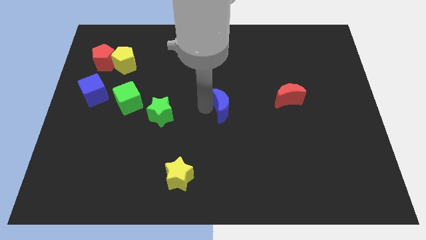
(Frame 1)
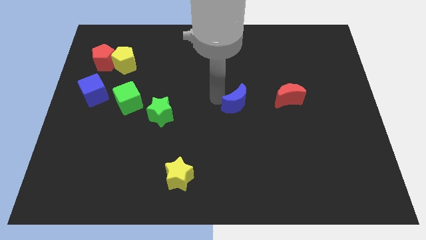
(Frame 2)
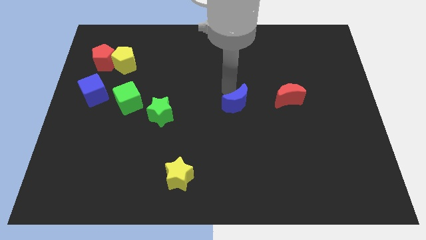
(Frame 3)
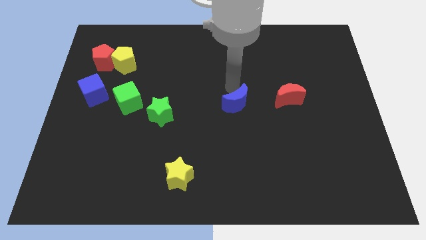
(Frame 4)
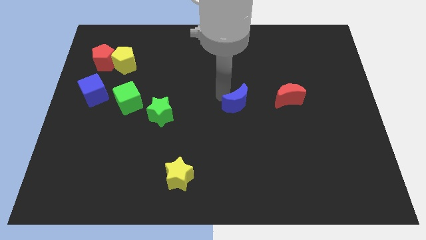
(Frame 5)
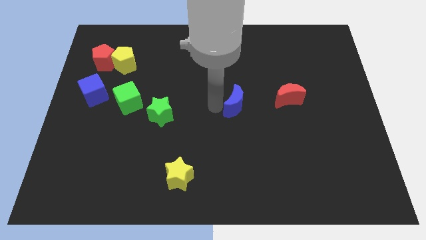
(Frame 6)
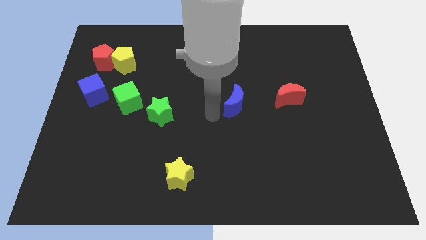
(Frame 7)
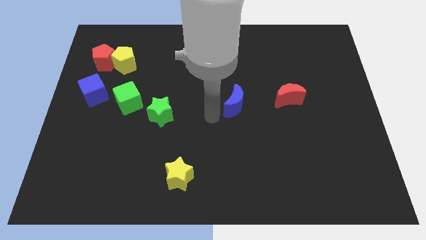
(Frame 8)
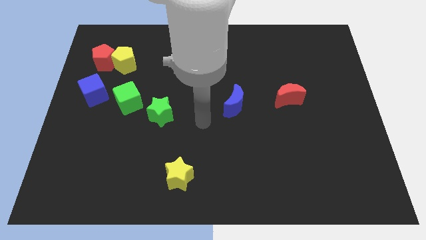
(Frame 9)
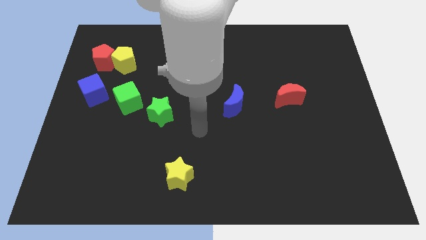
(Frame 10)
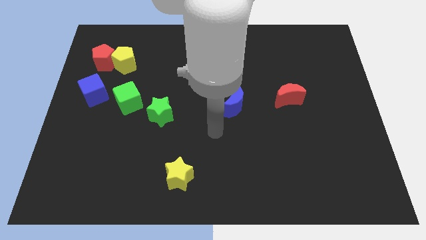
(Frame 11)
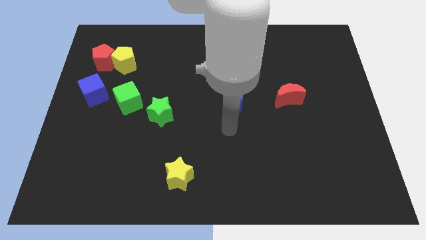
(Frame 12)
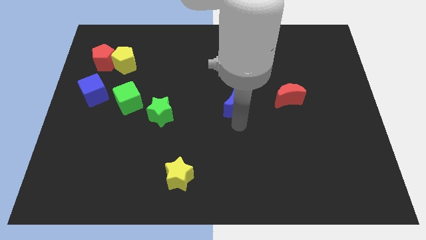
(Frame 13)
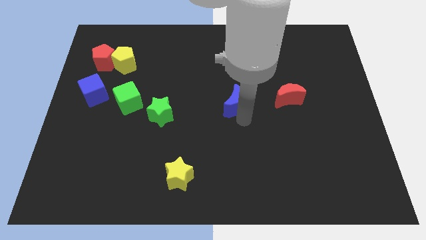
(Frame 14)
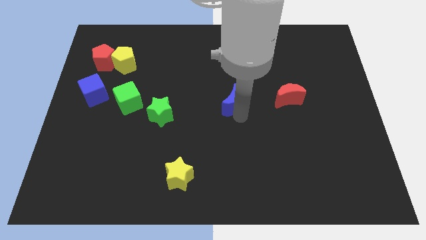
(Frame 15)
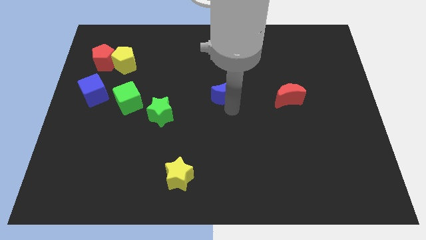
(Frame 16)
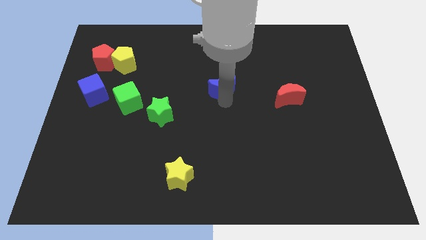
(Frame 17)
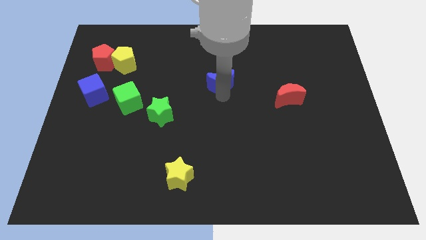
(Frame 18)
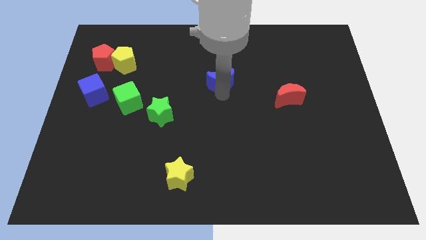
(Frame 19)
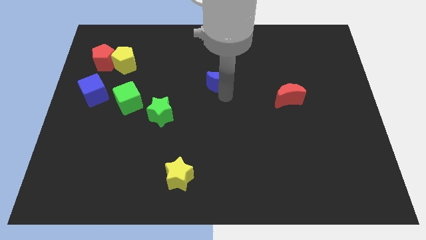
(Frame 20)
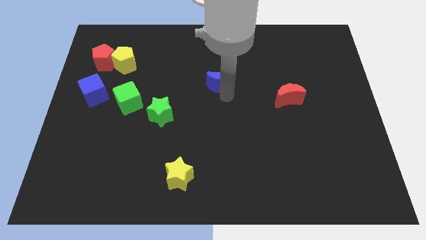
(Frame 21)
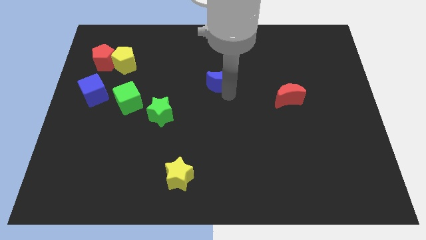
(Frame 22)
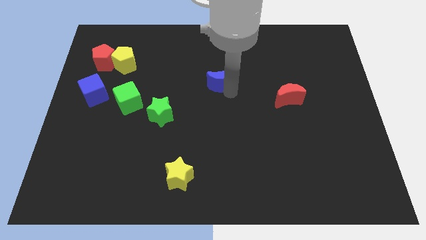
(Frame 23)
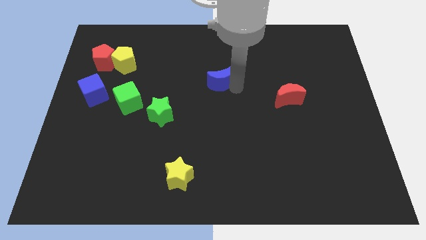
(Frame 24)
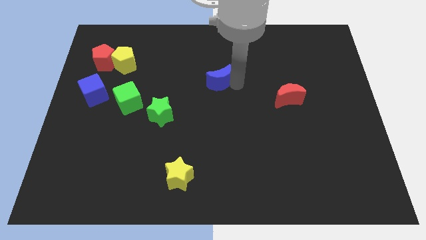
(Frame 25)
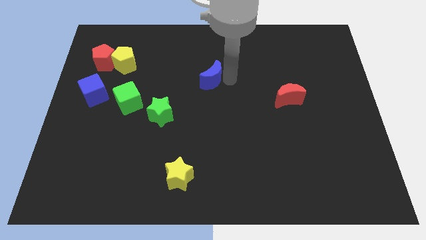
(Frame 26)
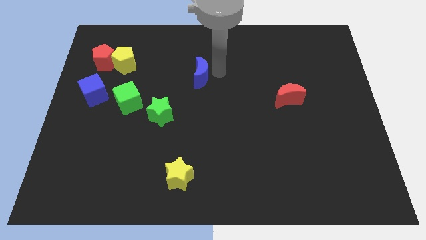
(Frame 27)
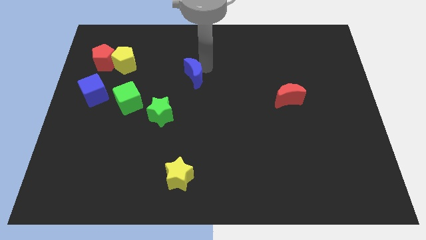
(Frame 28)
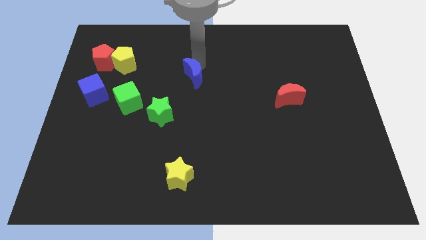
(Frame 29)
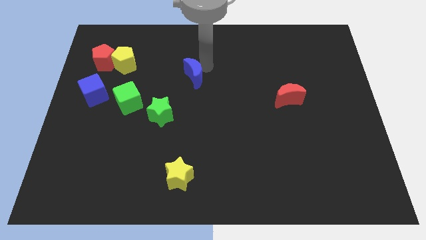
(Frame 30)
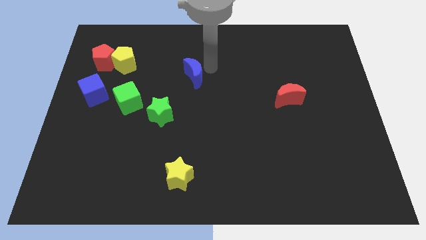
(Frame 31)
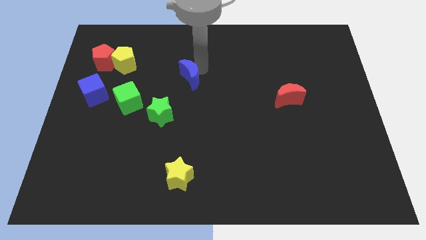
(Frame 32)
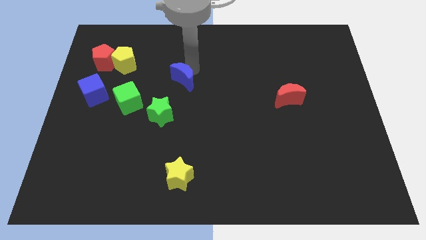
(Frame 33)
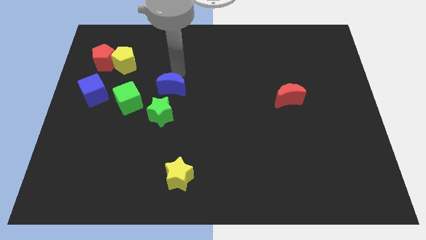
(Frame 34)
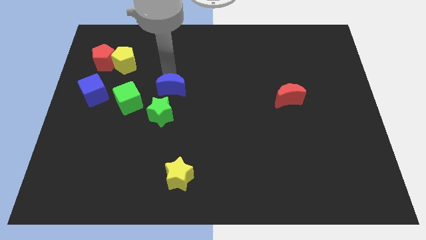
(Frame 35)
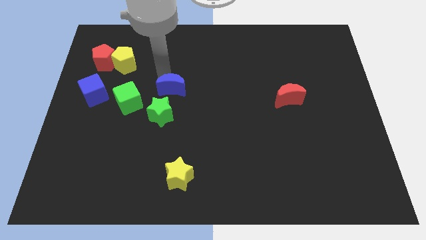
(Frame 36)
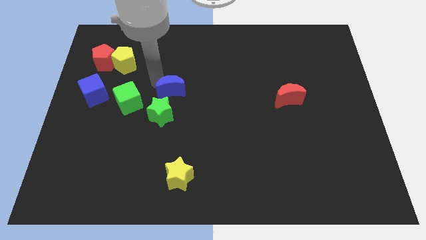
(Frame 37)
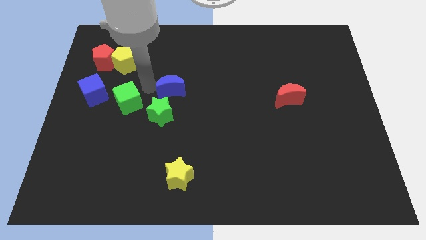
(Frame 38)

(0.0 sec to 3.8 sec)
place the blue moon to the right of the green cube

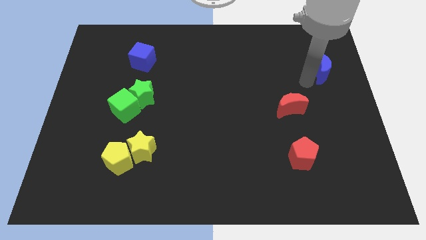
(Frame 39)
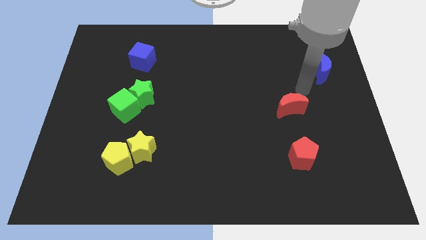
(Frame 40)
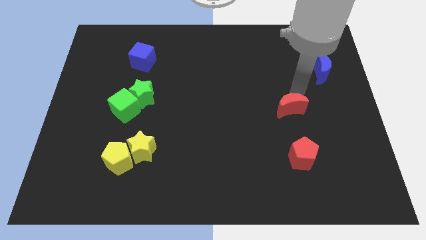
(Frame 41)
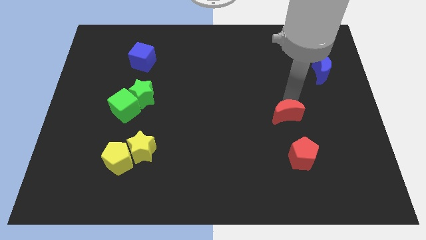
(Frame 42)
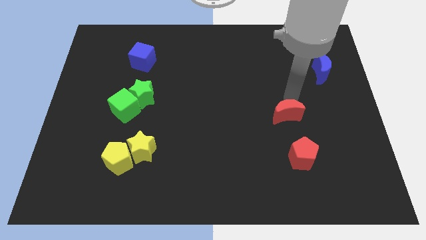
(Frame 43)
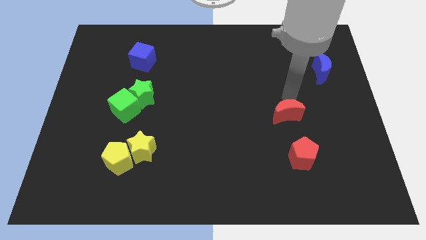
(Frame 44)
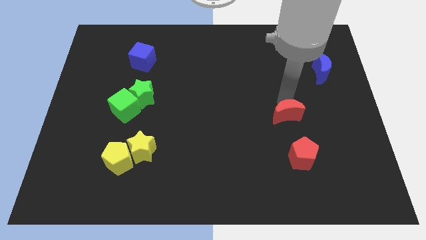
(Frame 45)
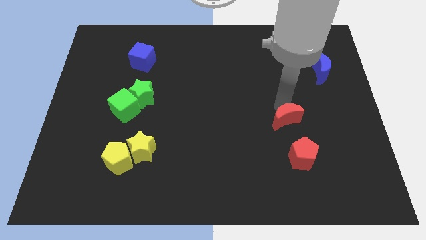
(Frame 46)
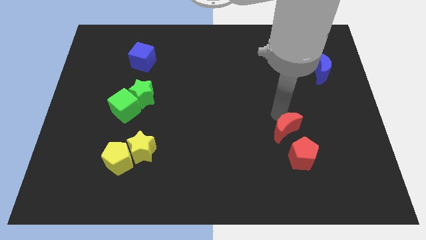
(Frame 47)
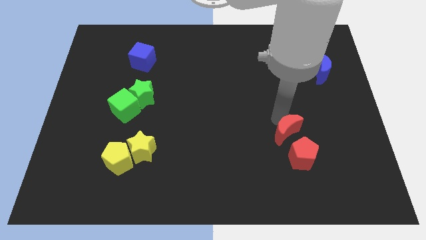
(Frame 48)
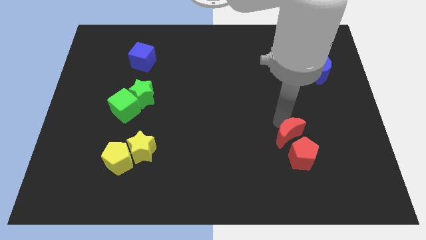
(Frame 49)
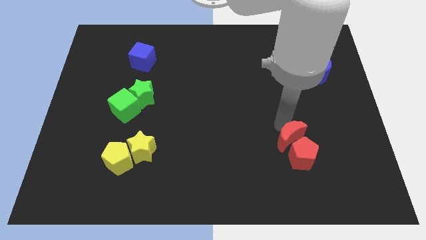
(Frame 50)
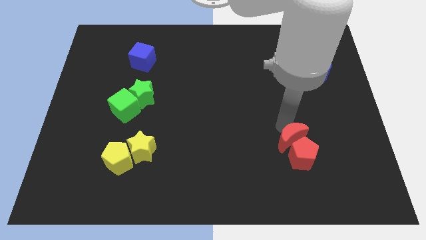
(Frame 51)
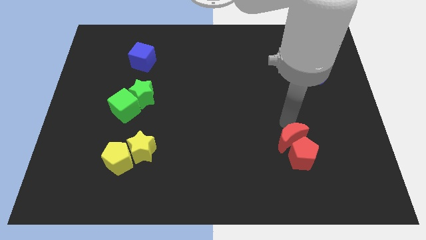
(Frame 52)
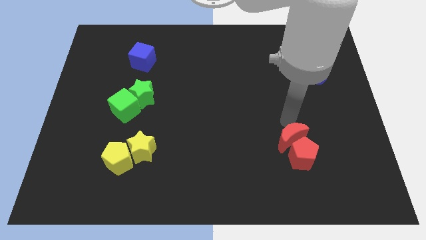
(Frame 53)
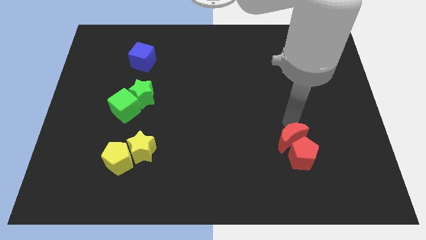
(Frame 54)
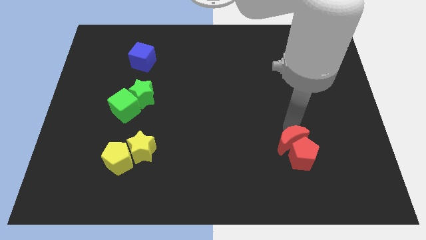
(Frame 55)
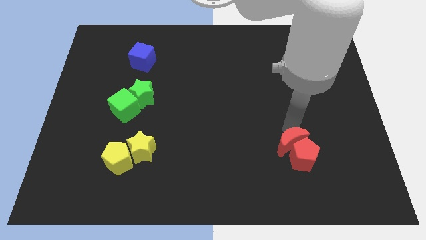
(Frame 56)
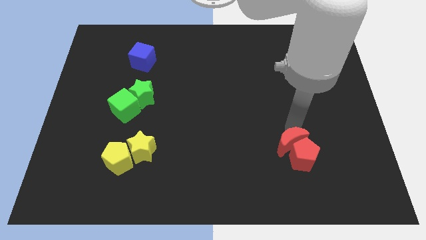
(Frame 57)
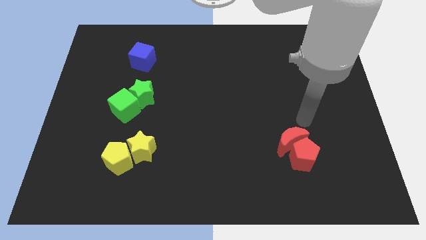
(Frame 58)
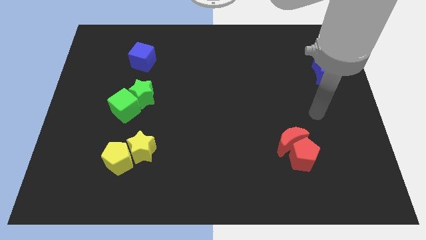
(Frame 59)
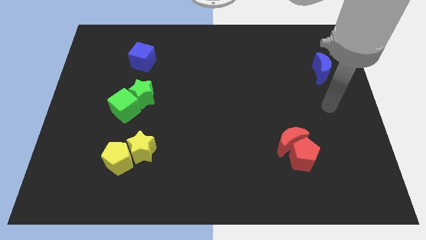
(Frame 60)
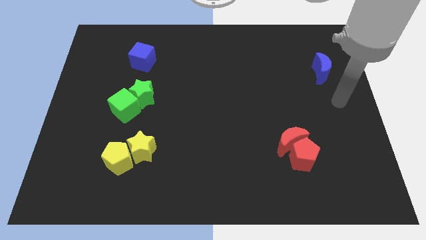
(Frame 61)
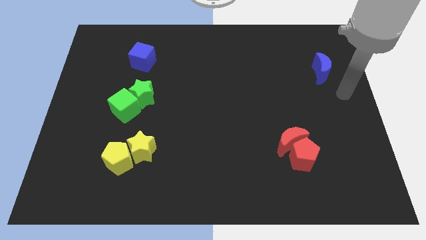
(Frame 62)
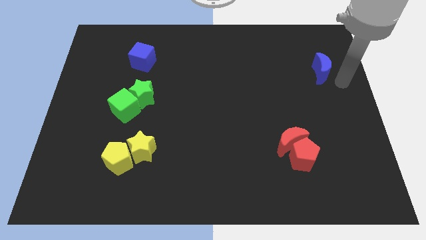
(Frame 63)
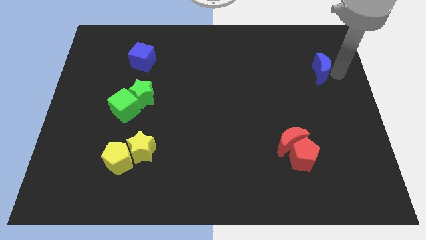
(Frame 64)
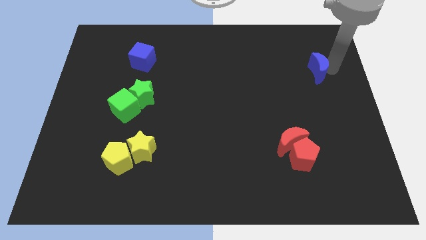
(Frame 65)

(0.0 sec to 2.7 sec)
move red crescent into the red pentagon

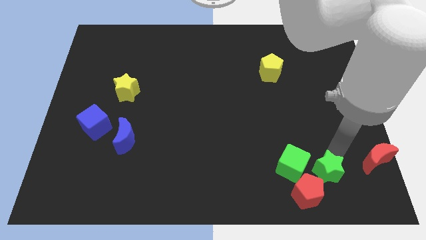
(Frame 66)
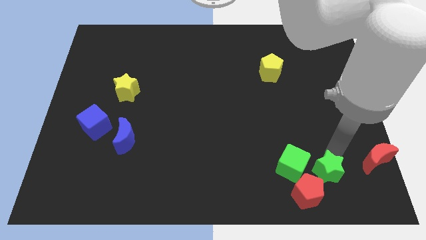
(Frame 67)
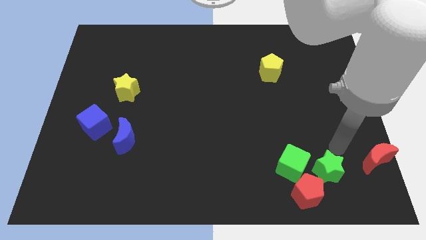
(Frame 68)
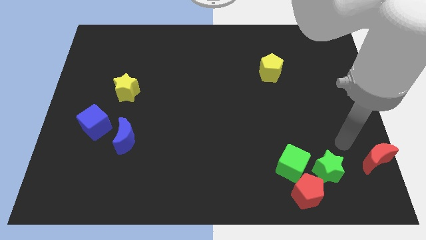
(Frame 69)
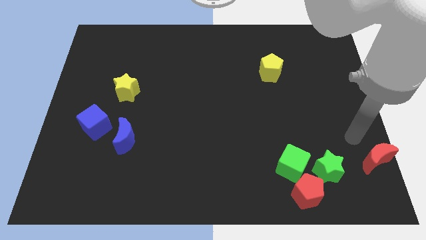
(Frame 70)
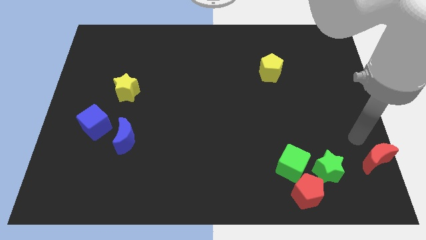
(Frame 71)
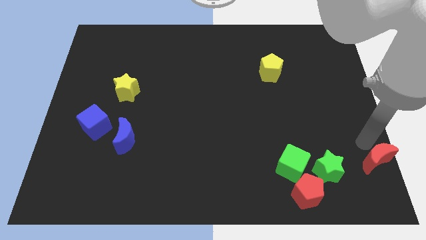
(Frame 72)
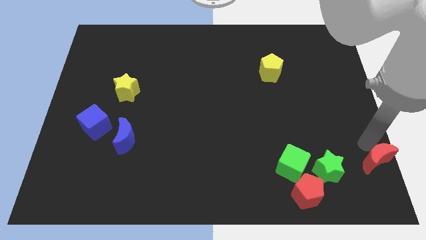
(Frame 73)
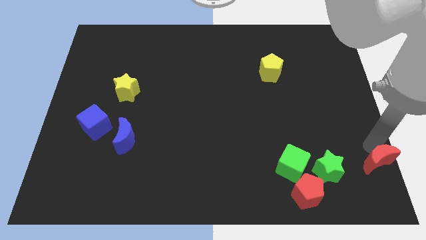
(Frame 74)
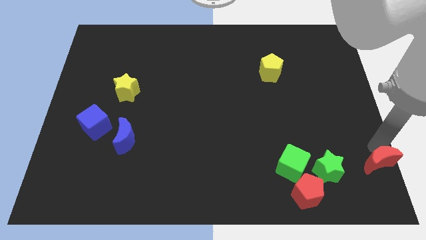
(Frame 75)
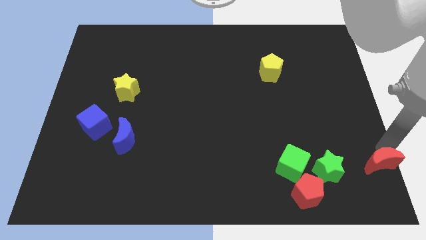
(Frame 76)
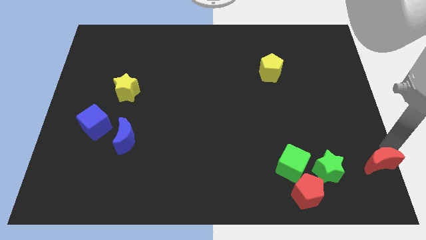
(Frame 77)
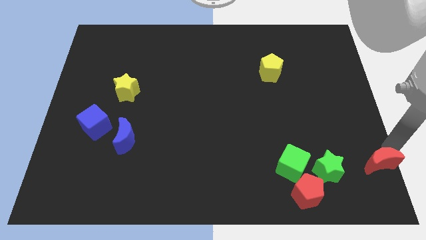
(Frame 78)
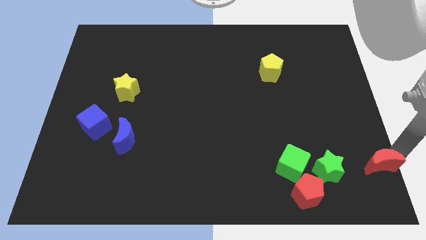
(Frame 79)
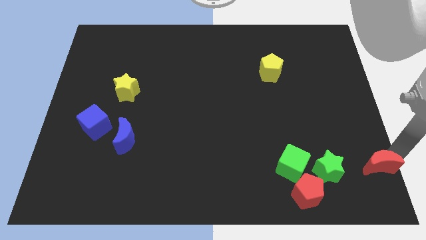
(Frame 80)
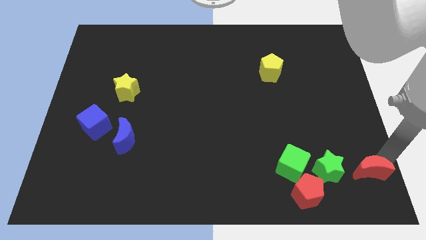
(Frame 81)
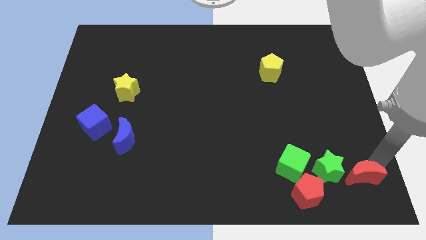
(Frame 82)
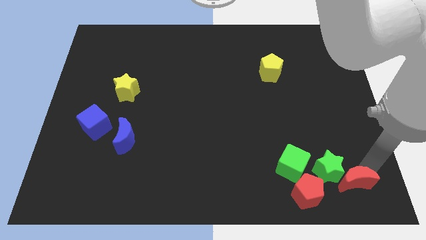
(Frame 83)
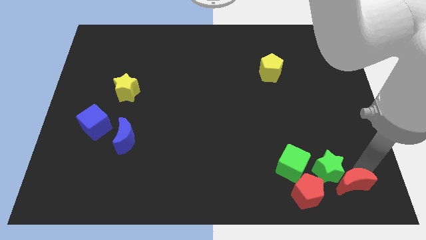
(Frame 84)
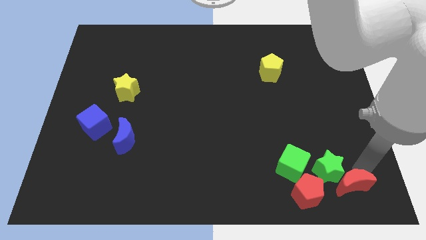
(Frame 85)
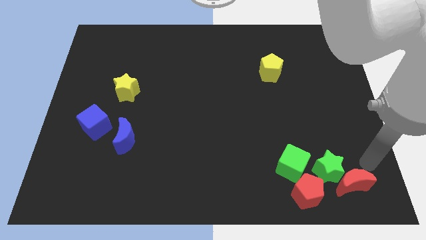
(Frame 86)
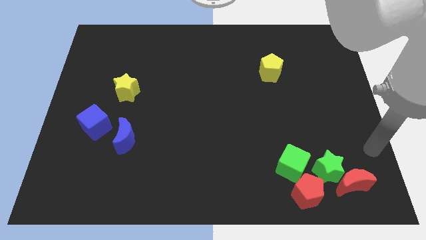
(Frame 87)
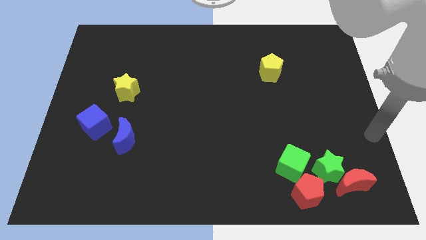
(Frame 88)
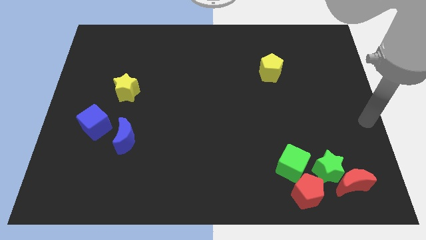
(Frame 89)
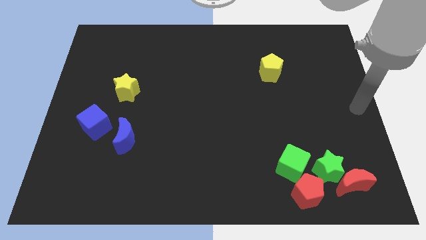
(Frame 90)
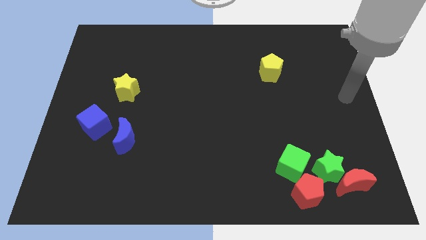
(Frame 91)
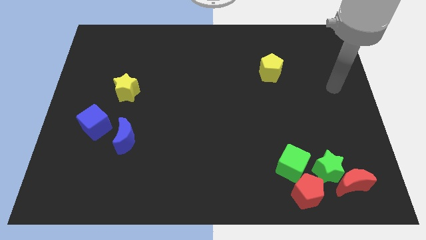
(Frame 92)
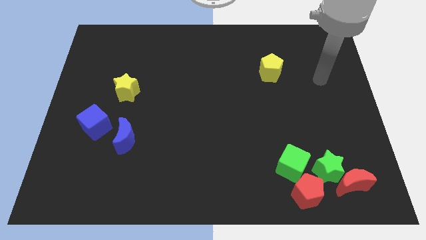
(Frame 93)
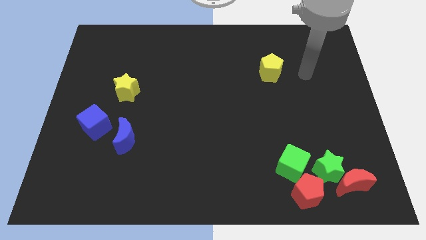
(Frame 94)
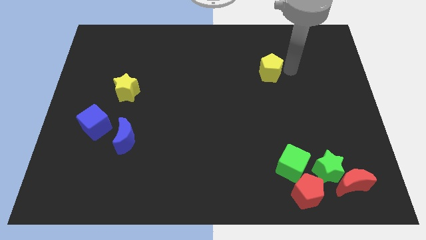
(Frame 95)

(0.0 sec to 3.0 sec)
move the red crescent close to the bottom right of the green star
